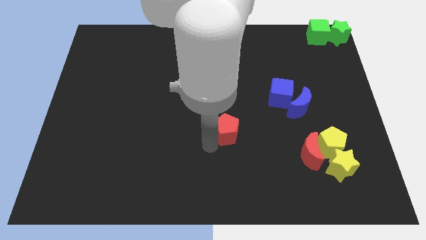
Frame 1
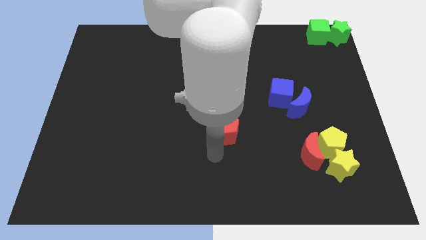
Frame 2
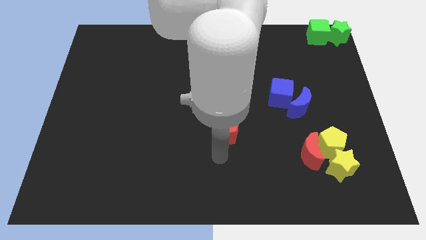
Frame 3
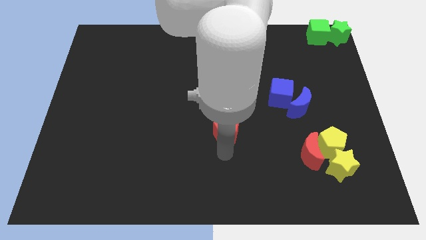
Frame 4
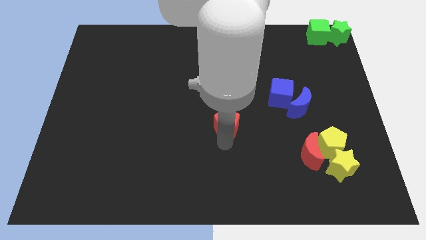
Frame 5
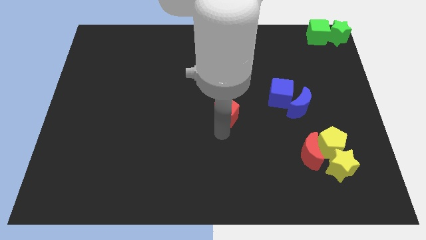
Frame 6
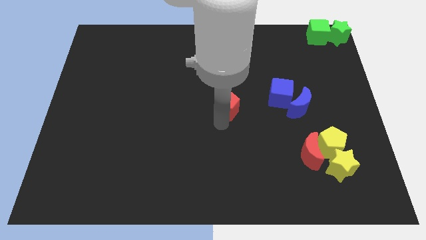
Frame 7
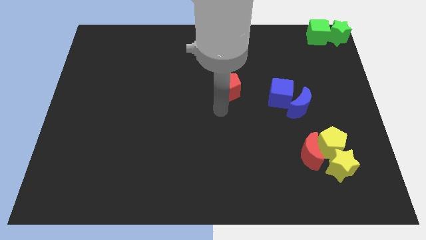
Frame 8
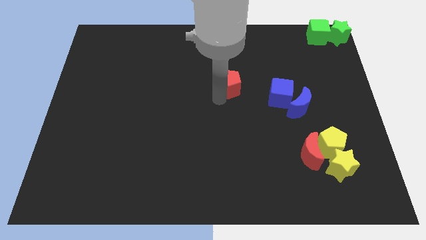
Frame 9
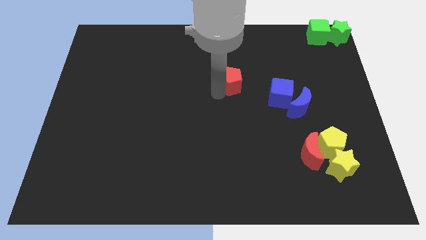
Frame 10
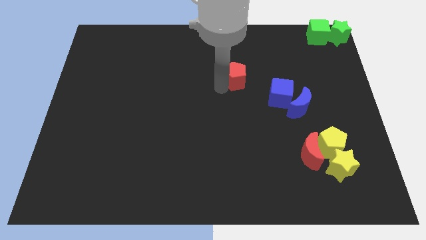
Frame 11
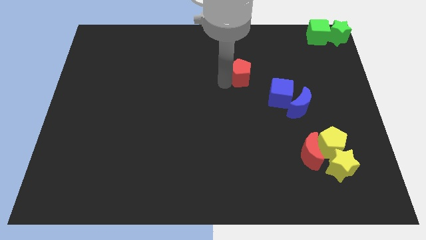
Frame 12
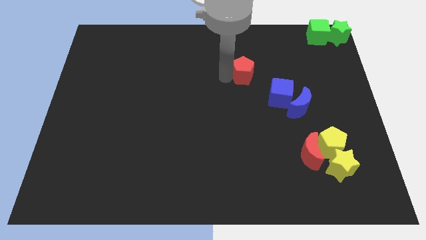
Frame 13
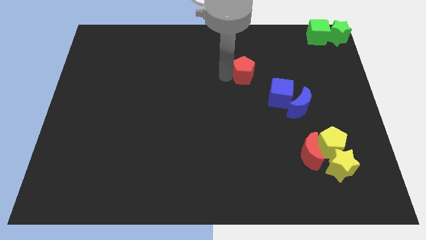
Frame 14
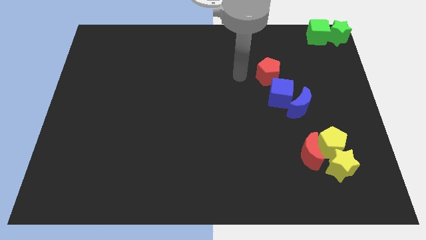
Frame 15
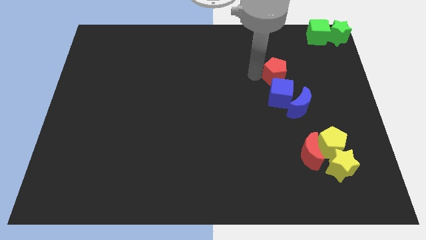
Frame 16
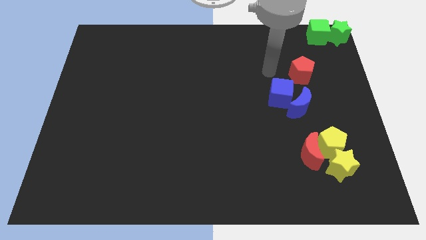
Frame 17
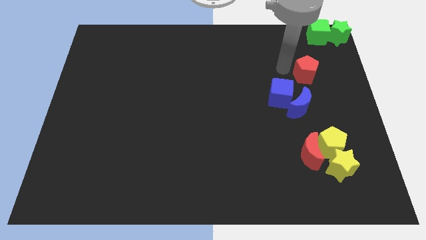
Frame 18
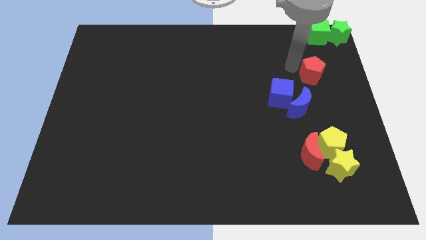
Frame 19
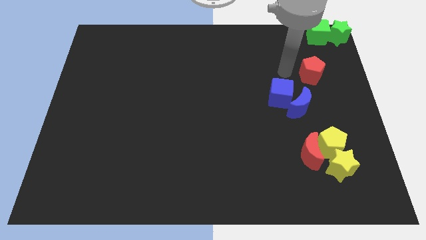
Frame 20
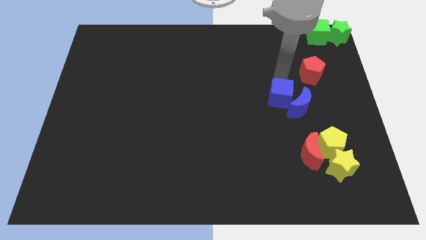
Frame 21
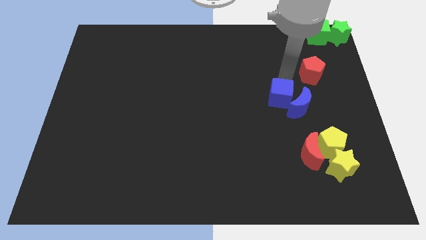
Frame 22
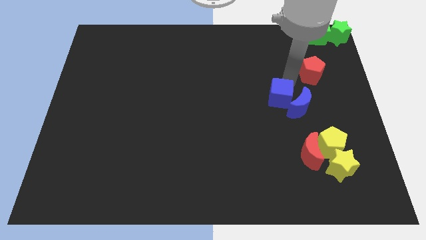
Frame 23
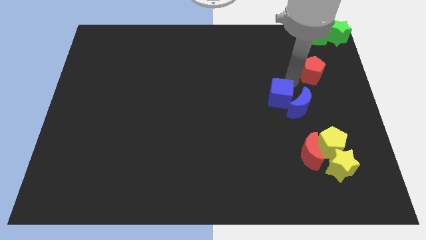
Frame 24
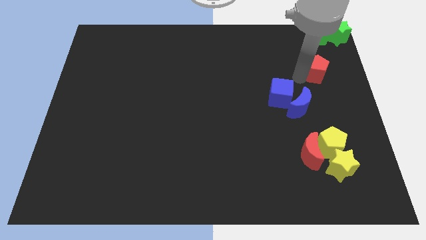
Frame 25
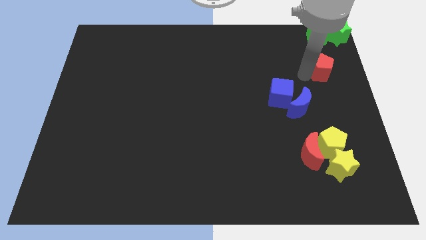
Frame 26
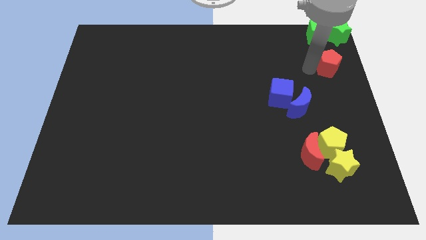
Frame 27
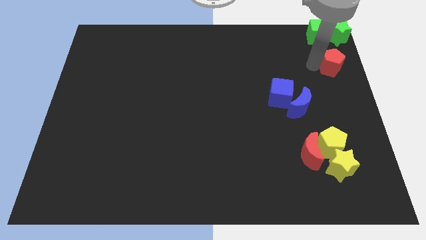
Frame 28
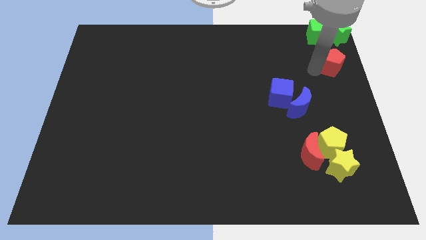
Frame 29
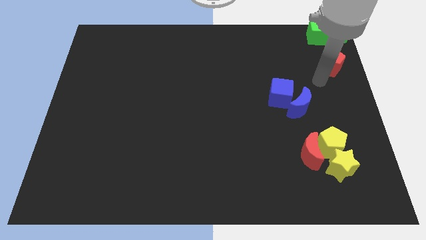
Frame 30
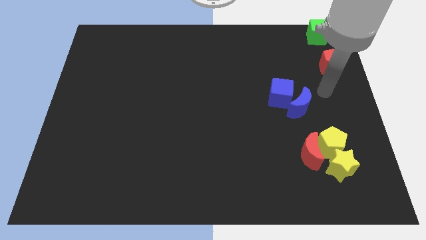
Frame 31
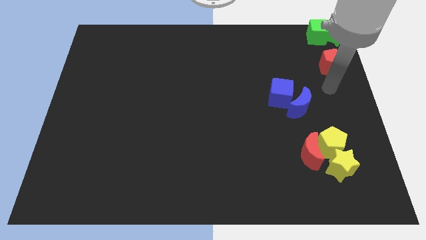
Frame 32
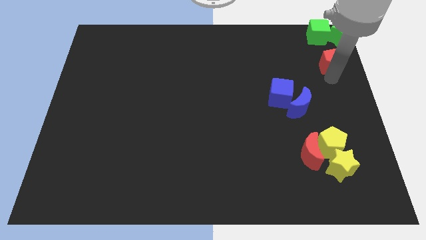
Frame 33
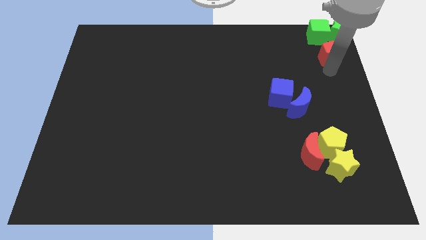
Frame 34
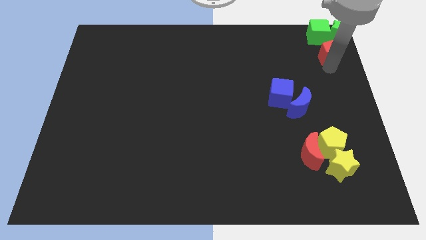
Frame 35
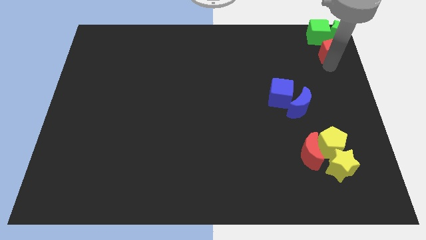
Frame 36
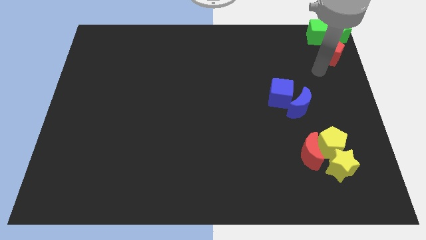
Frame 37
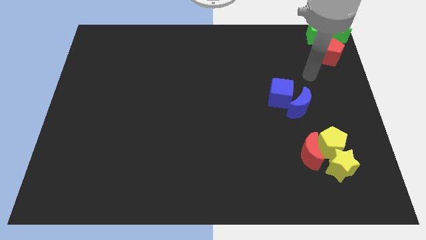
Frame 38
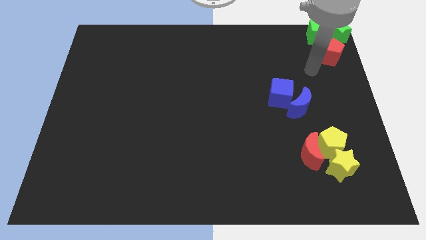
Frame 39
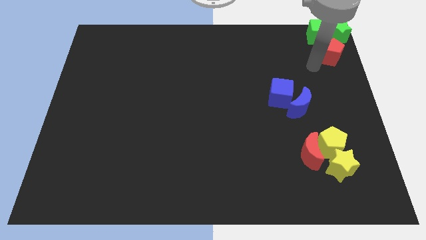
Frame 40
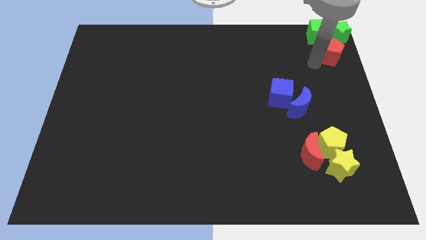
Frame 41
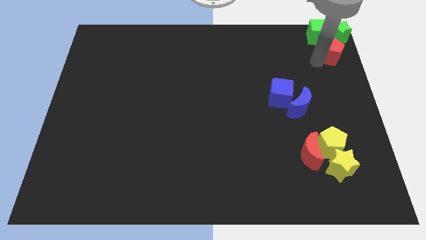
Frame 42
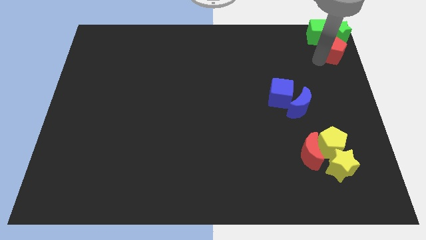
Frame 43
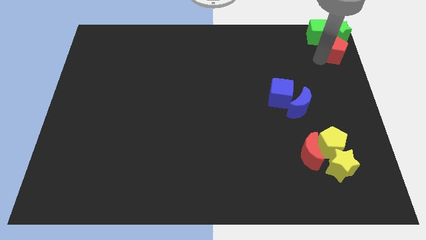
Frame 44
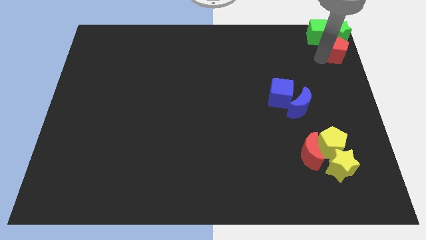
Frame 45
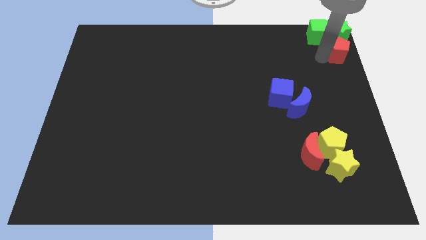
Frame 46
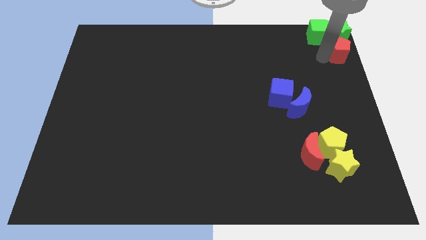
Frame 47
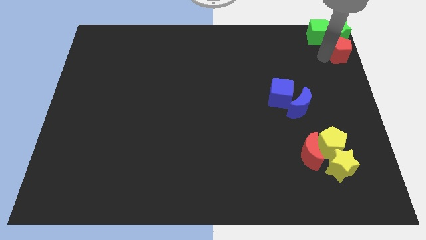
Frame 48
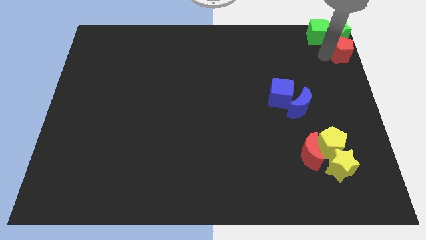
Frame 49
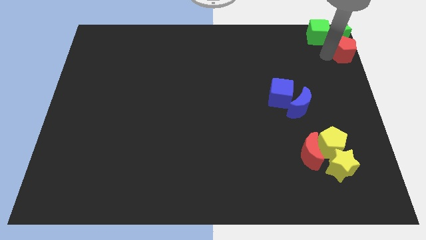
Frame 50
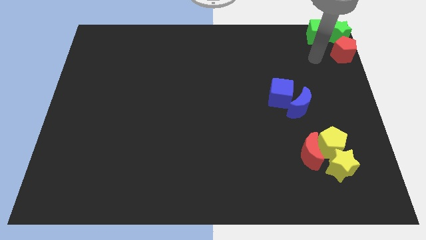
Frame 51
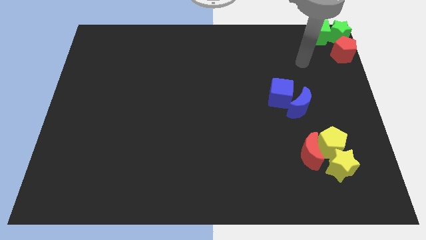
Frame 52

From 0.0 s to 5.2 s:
place the red pentagon to the bottom of the green star

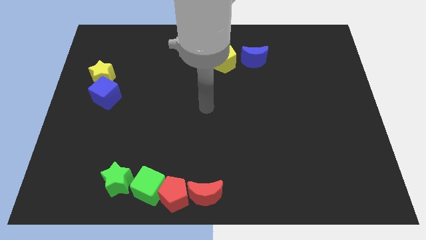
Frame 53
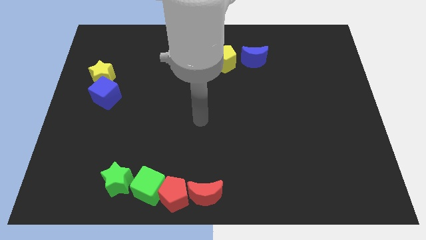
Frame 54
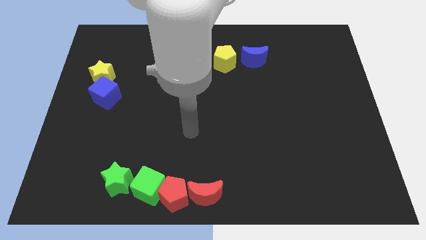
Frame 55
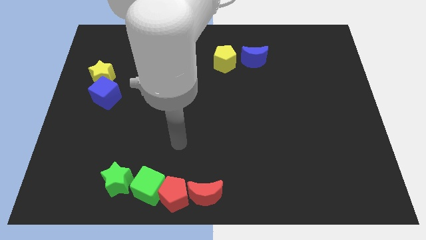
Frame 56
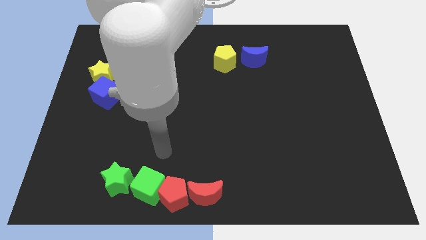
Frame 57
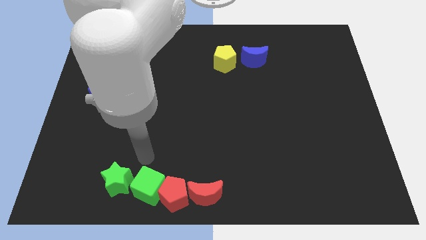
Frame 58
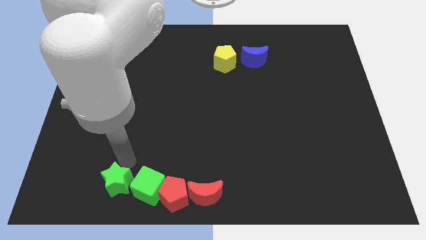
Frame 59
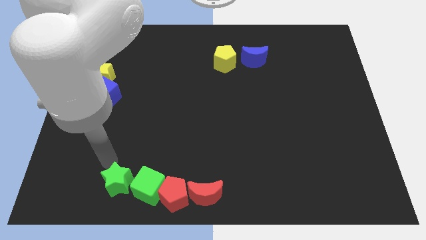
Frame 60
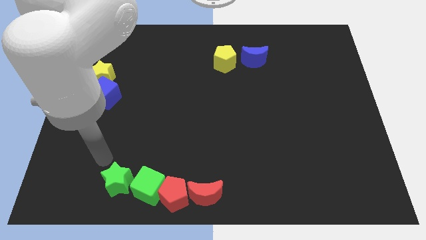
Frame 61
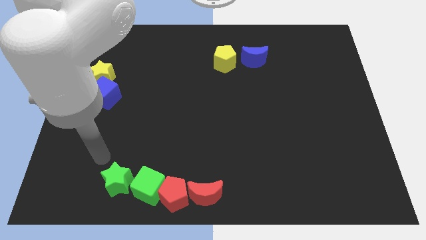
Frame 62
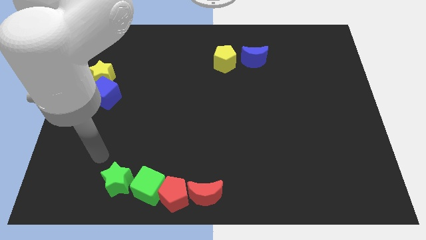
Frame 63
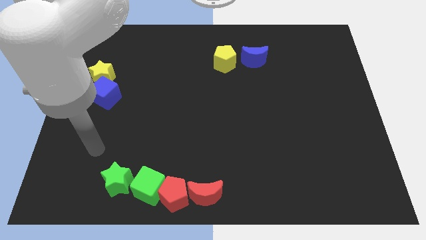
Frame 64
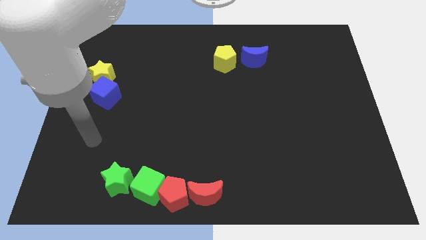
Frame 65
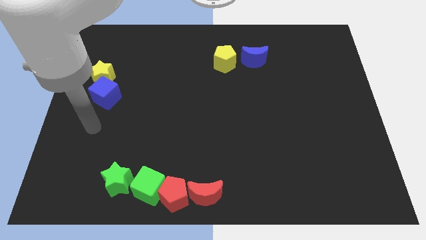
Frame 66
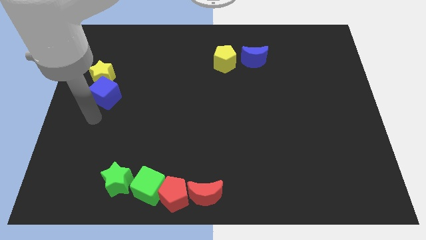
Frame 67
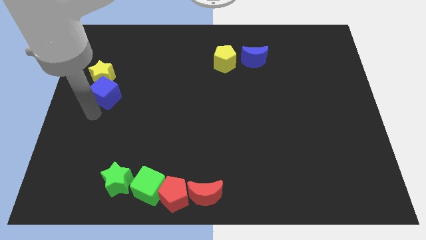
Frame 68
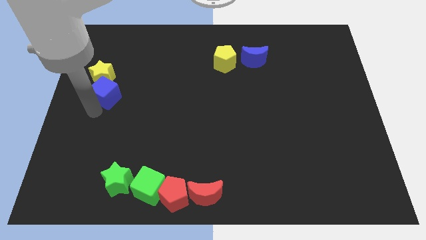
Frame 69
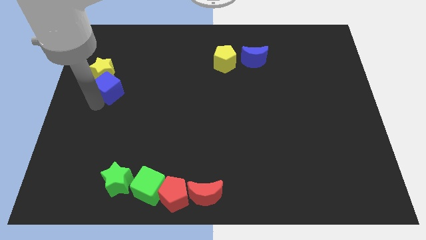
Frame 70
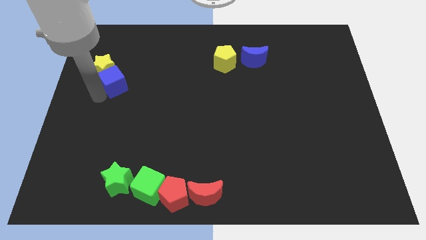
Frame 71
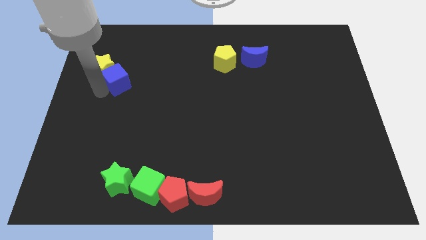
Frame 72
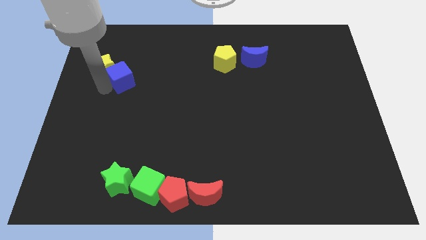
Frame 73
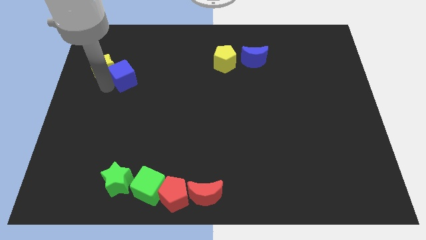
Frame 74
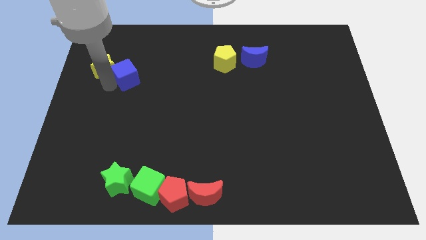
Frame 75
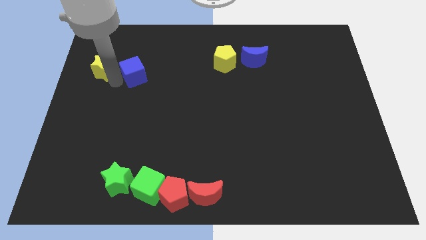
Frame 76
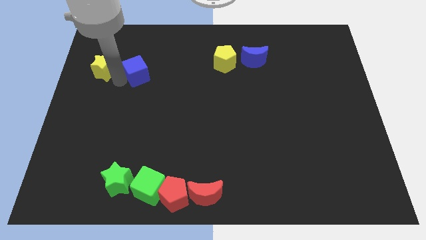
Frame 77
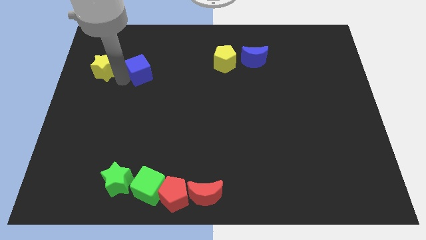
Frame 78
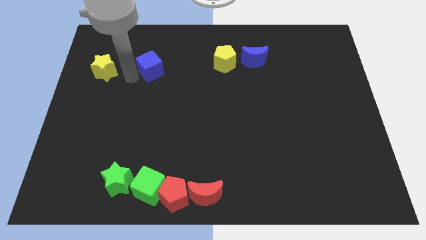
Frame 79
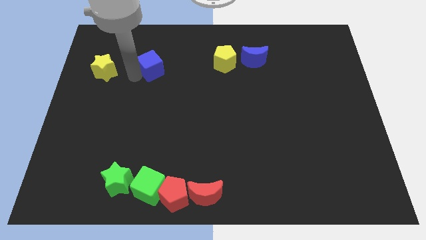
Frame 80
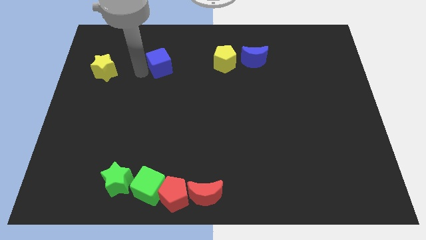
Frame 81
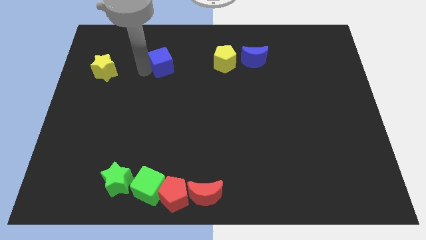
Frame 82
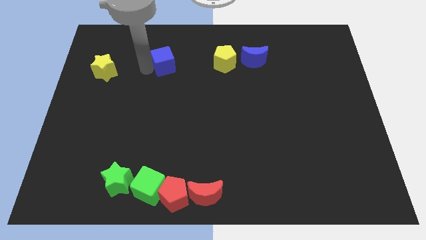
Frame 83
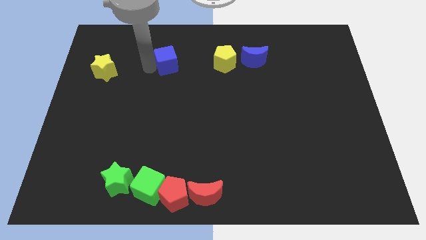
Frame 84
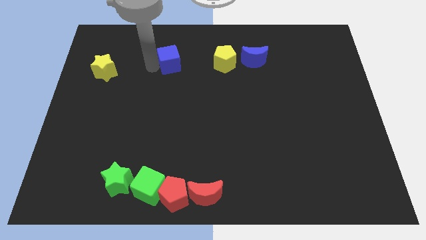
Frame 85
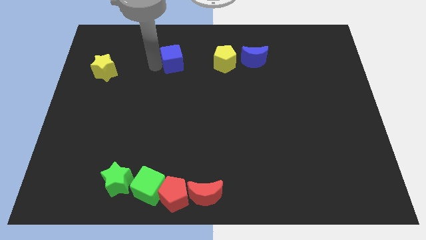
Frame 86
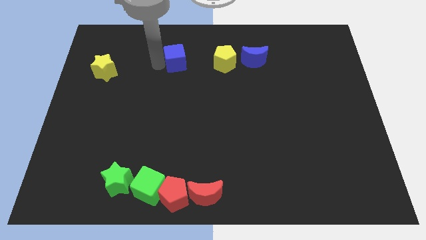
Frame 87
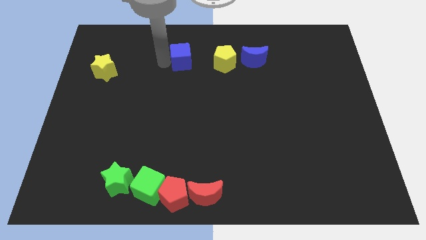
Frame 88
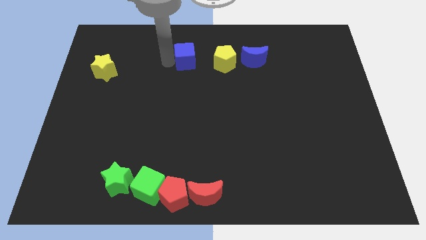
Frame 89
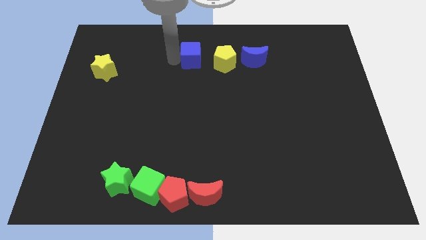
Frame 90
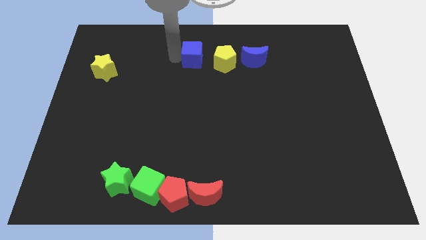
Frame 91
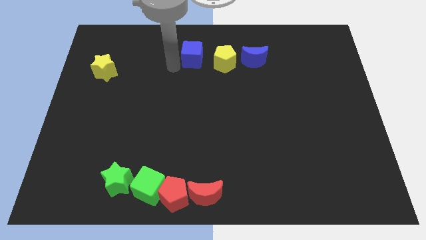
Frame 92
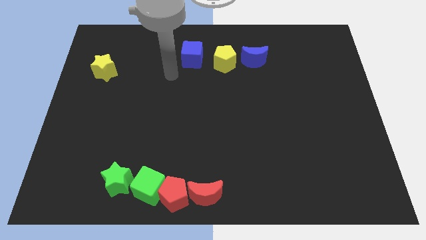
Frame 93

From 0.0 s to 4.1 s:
push the blue cube to the left of the yellow pentagon
